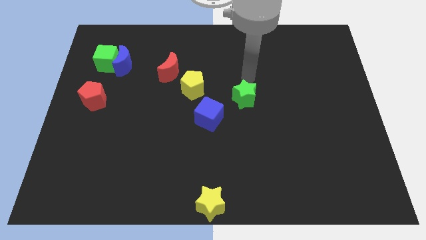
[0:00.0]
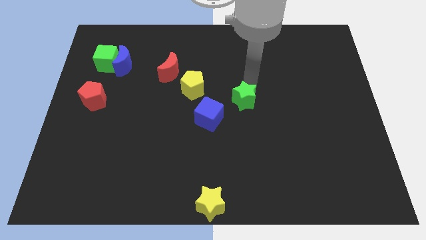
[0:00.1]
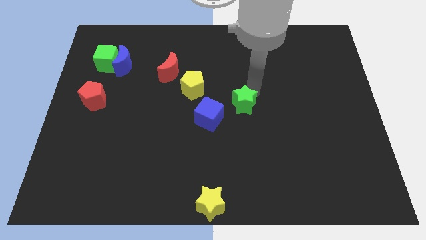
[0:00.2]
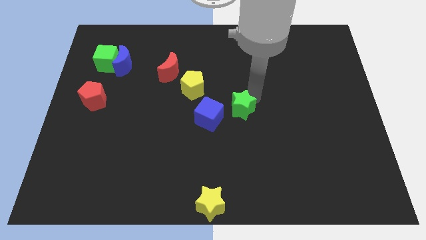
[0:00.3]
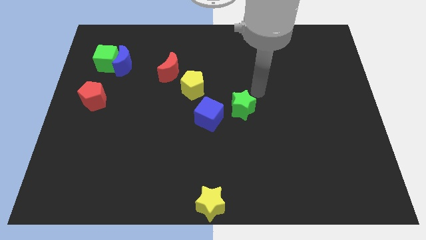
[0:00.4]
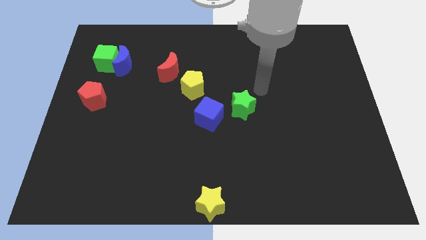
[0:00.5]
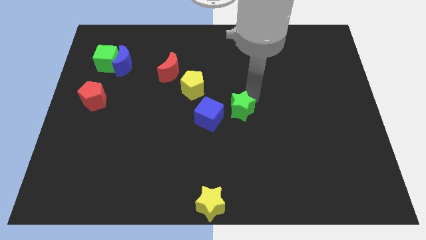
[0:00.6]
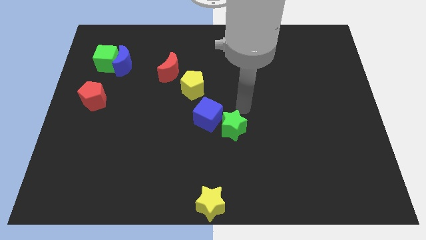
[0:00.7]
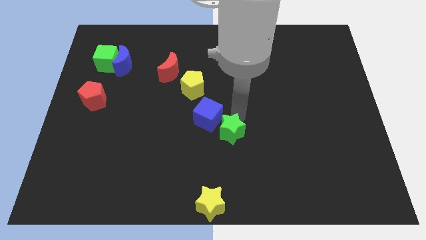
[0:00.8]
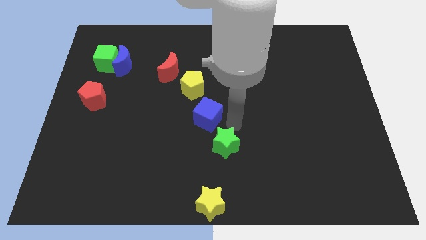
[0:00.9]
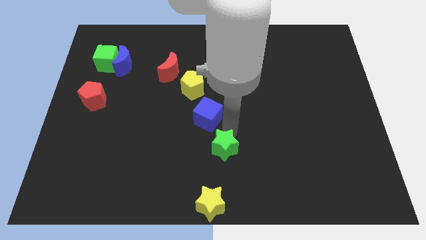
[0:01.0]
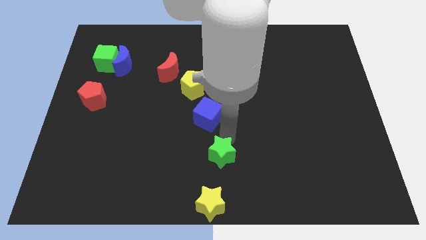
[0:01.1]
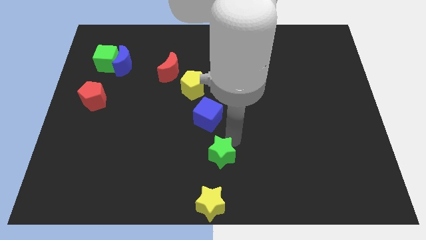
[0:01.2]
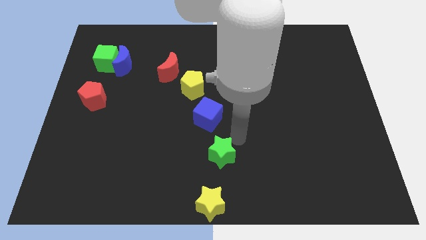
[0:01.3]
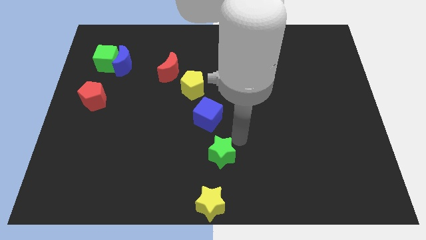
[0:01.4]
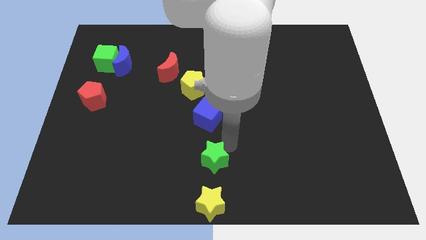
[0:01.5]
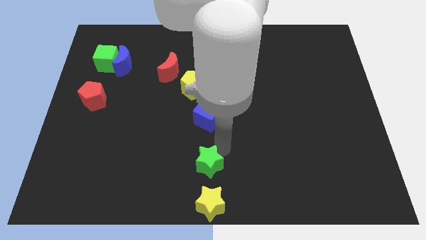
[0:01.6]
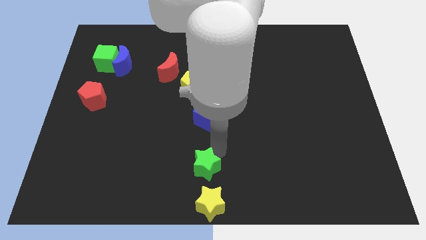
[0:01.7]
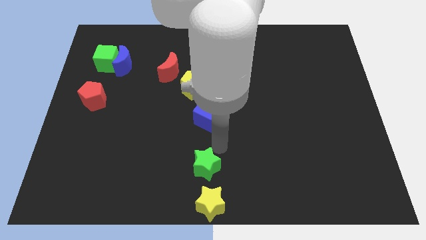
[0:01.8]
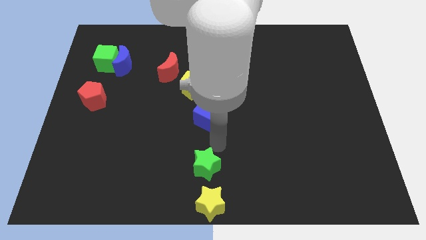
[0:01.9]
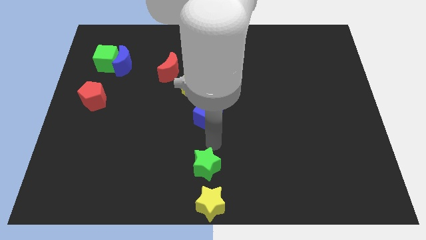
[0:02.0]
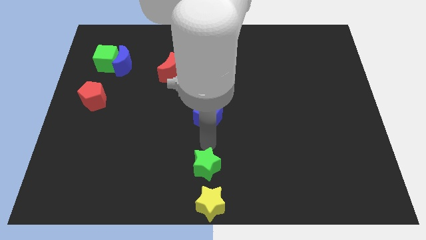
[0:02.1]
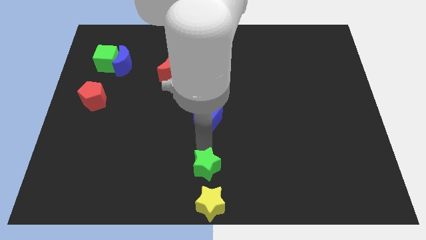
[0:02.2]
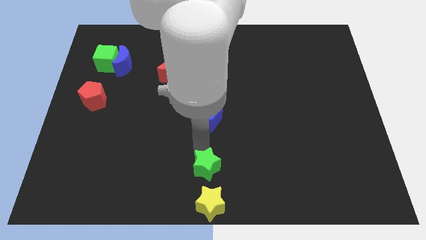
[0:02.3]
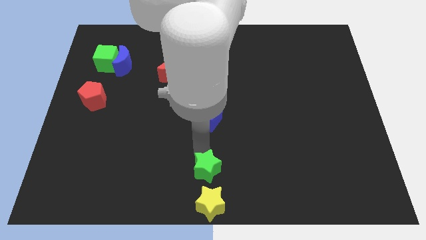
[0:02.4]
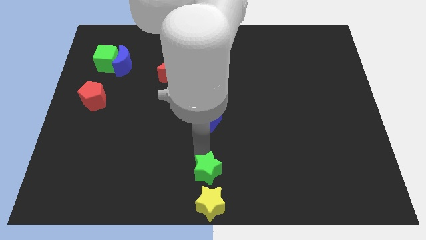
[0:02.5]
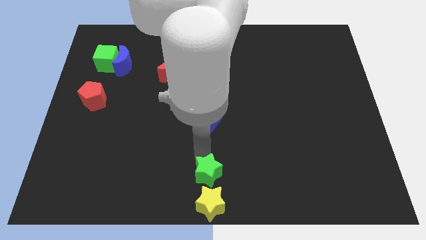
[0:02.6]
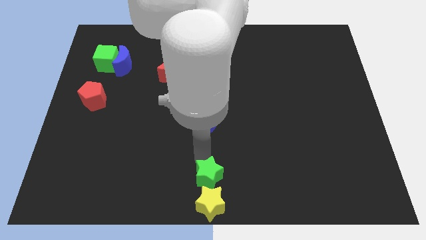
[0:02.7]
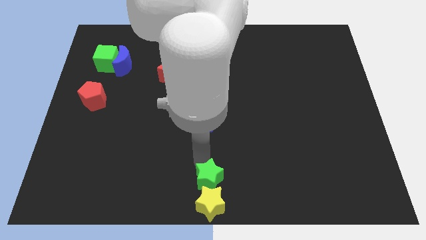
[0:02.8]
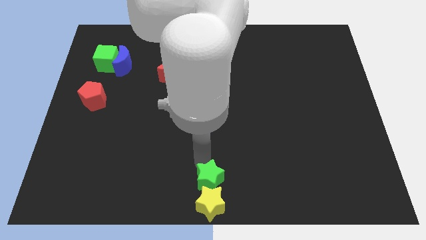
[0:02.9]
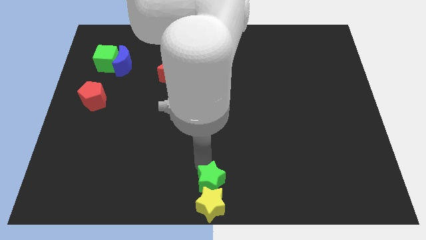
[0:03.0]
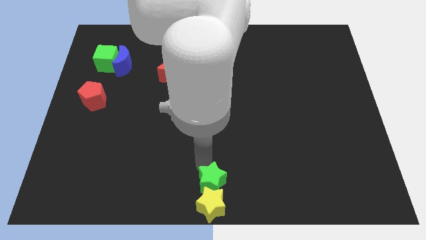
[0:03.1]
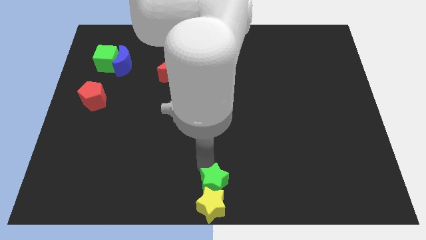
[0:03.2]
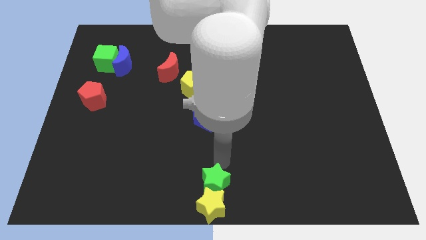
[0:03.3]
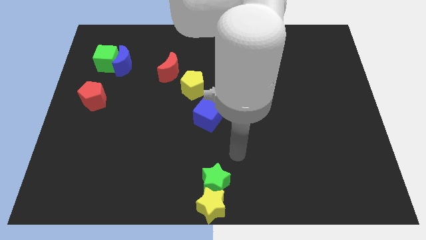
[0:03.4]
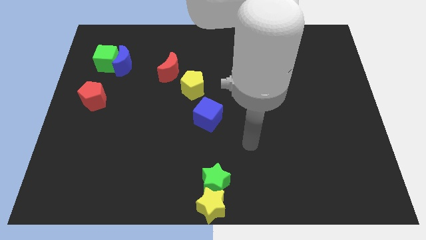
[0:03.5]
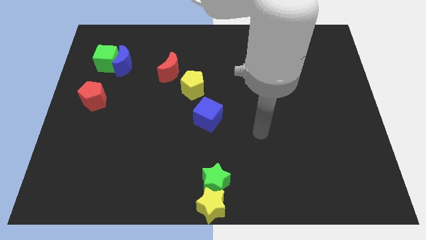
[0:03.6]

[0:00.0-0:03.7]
push green star into yellow star

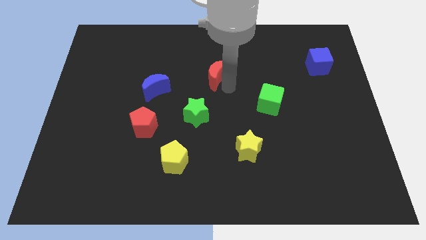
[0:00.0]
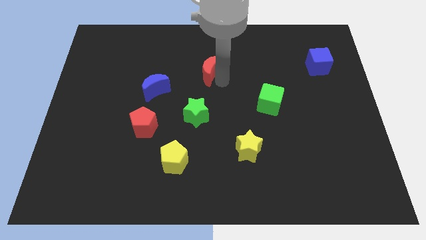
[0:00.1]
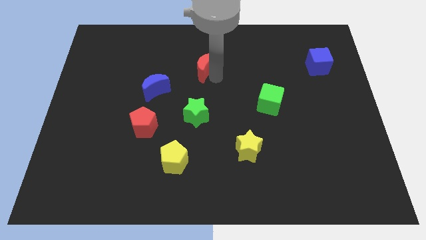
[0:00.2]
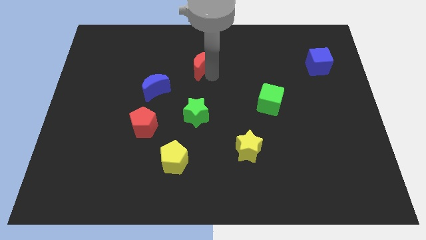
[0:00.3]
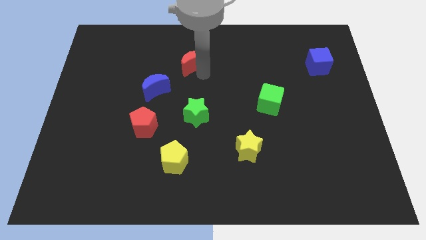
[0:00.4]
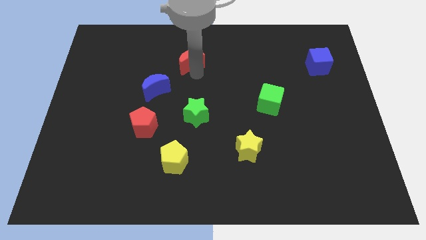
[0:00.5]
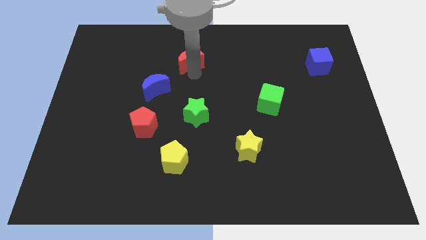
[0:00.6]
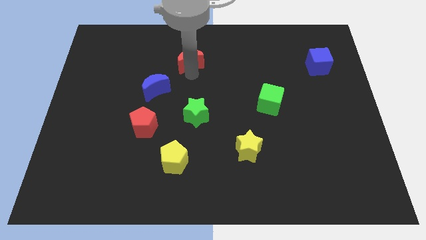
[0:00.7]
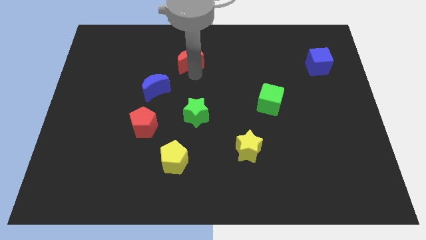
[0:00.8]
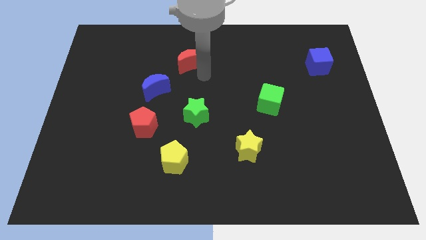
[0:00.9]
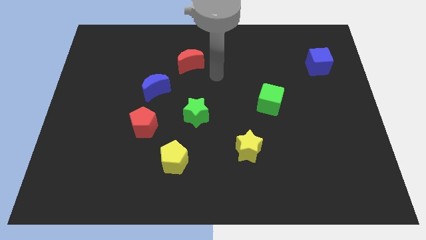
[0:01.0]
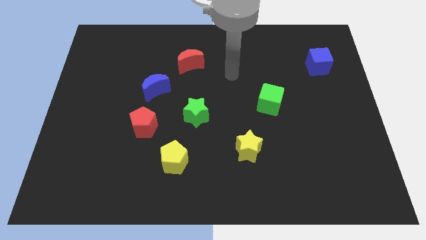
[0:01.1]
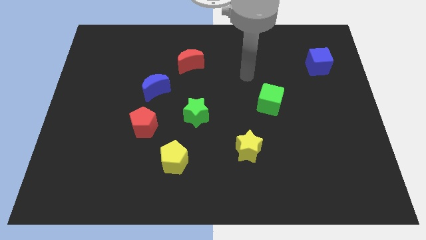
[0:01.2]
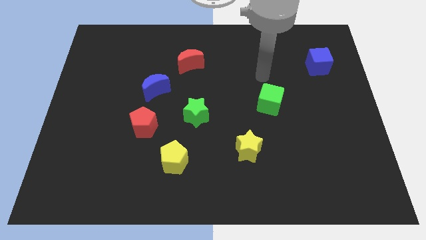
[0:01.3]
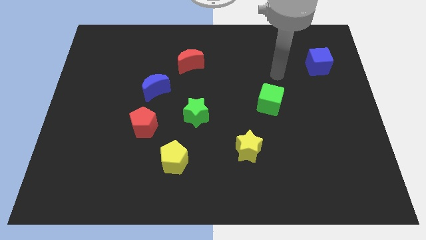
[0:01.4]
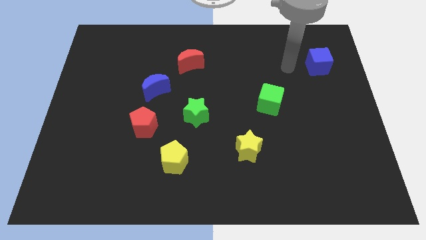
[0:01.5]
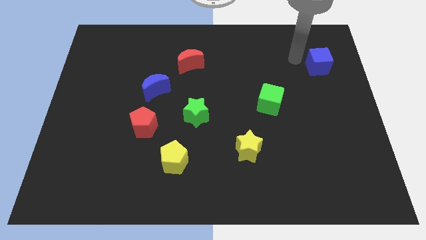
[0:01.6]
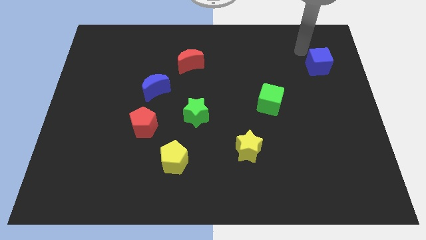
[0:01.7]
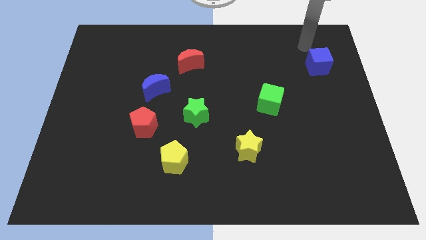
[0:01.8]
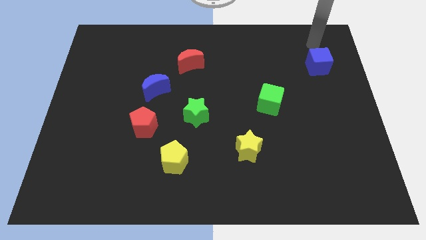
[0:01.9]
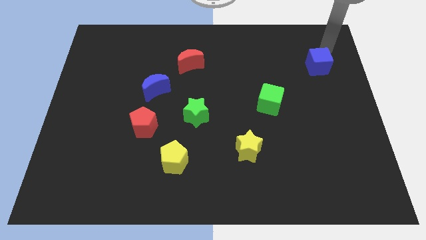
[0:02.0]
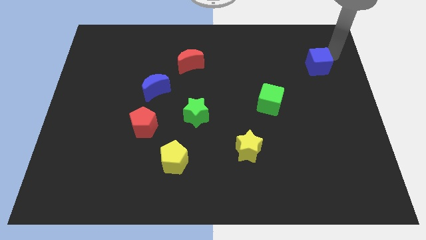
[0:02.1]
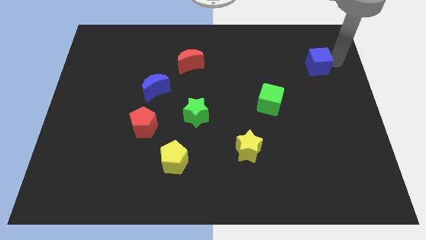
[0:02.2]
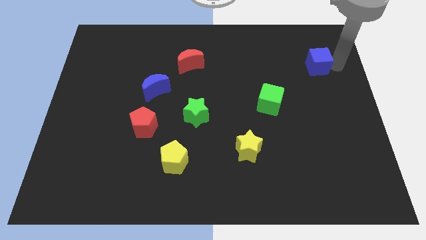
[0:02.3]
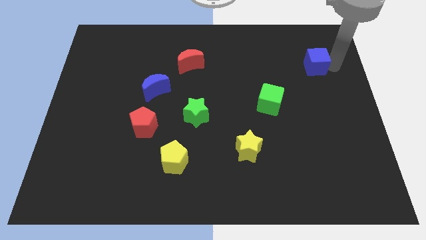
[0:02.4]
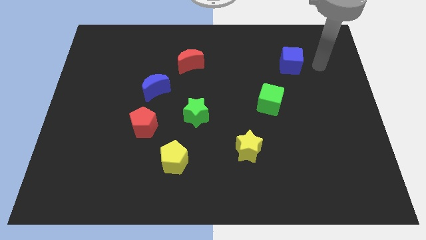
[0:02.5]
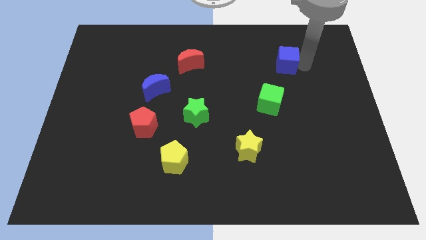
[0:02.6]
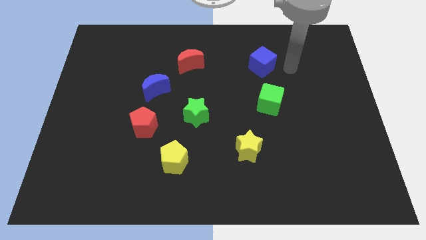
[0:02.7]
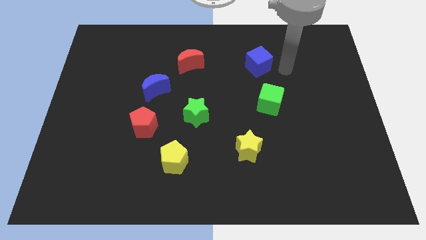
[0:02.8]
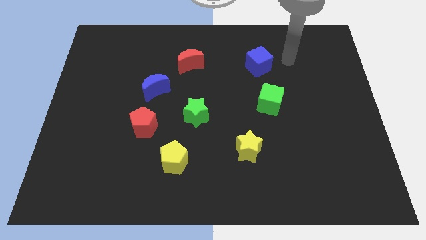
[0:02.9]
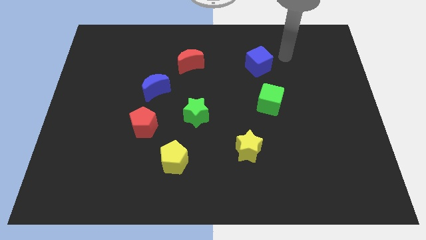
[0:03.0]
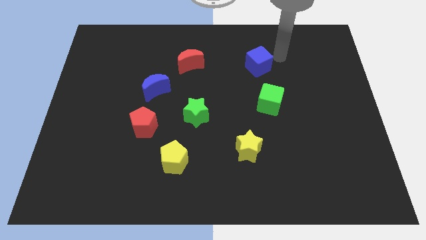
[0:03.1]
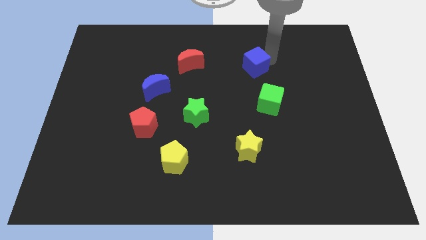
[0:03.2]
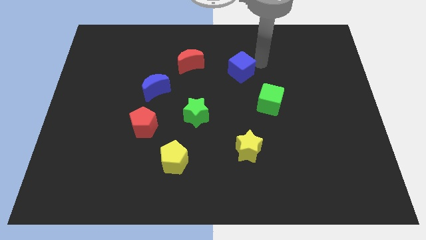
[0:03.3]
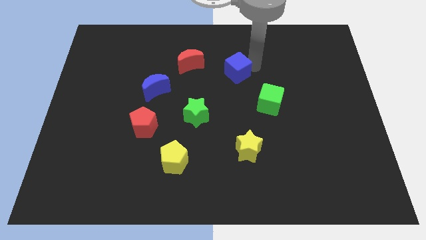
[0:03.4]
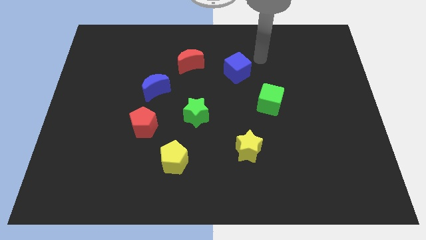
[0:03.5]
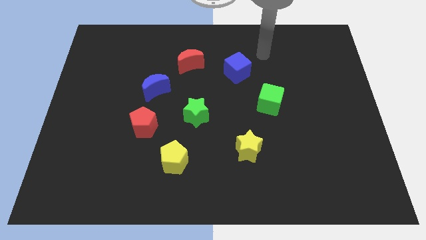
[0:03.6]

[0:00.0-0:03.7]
place the blue cube to the top left of the green cube

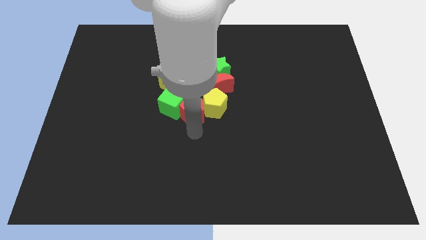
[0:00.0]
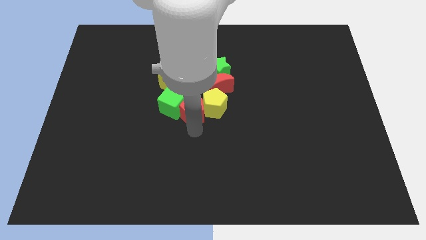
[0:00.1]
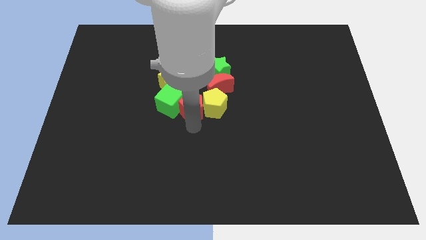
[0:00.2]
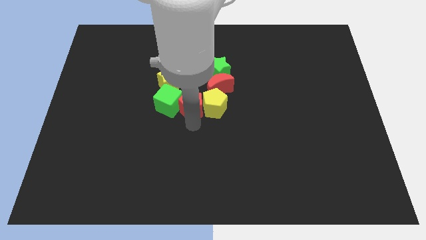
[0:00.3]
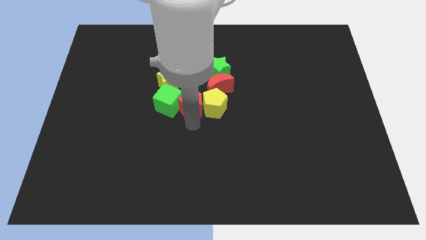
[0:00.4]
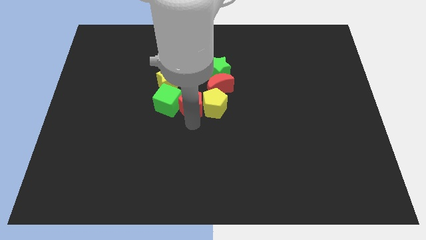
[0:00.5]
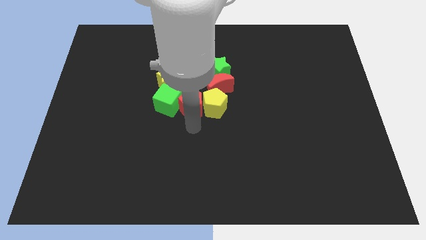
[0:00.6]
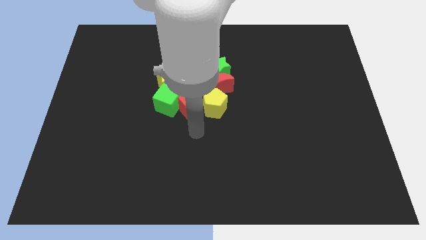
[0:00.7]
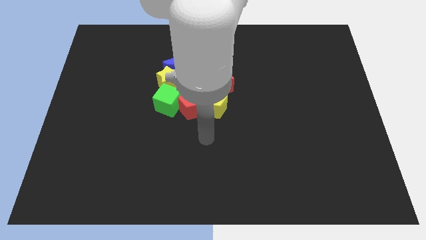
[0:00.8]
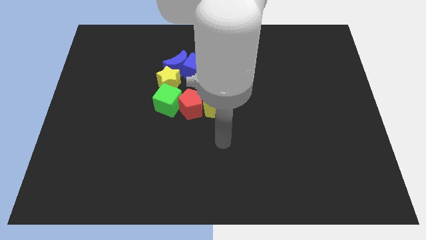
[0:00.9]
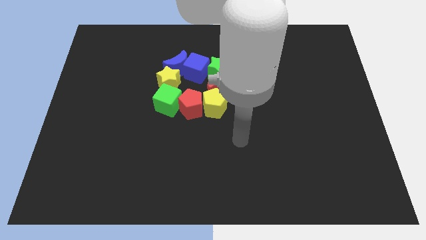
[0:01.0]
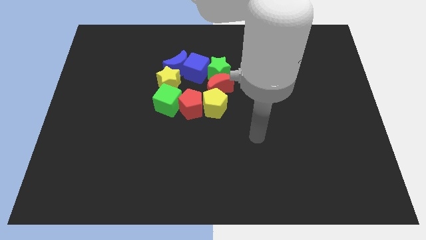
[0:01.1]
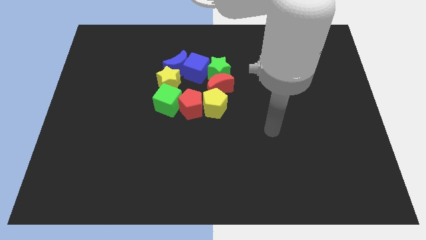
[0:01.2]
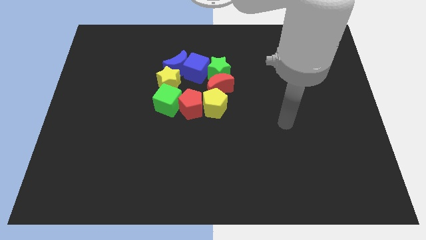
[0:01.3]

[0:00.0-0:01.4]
move the arm away from the red pentagon

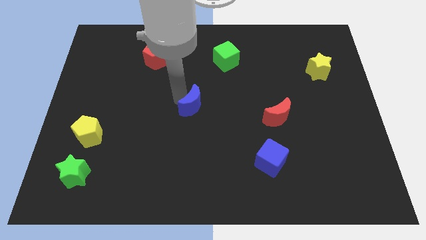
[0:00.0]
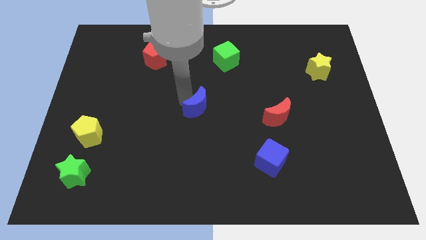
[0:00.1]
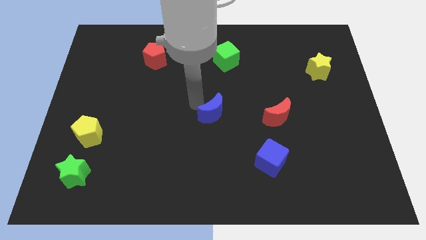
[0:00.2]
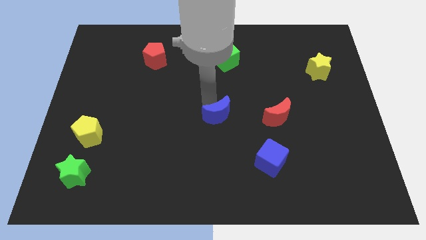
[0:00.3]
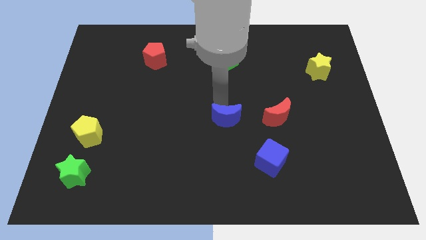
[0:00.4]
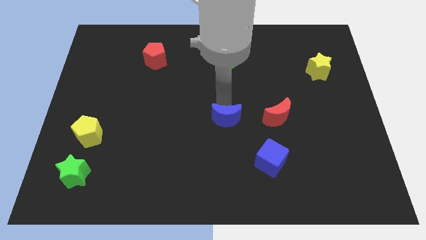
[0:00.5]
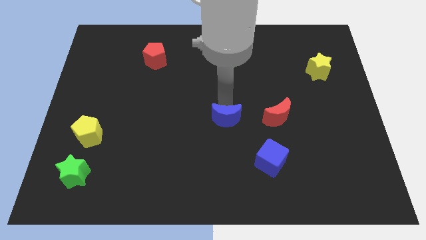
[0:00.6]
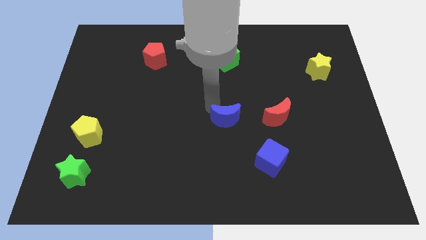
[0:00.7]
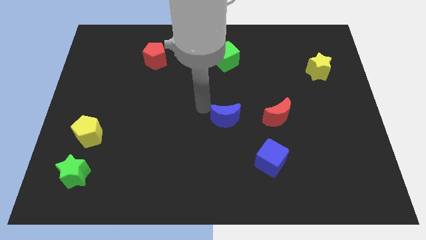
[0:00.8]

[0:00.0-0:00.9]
move blue crescent parallel to the bottom of the green cube
